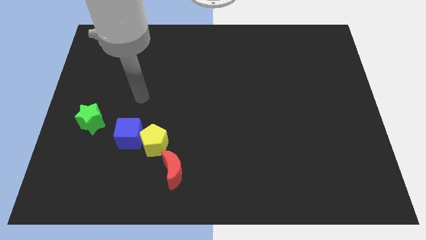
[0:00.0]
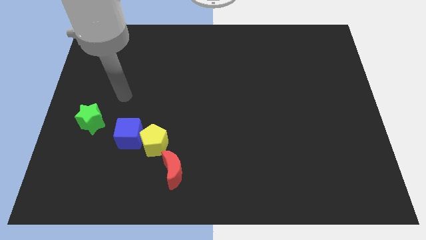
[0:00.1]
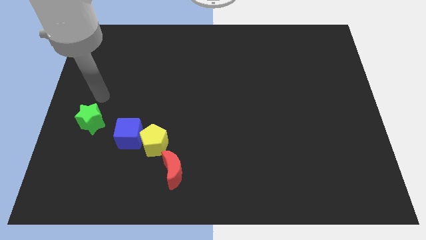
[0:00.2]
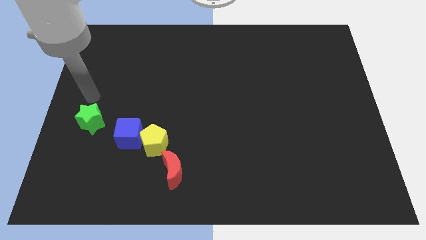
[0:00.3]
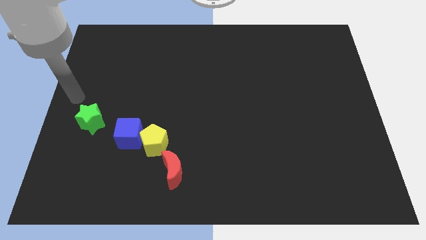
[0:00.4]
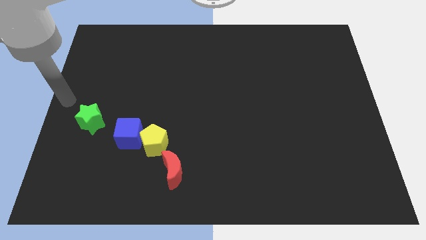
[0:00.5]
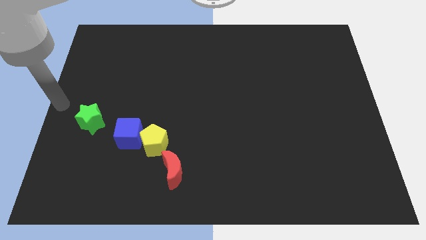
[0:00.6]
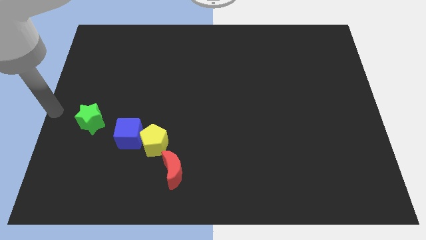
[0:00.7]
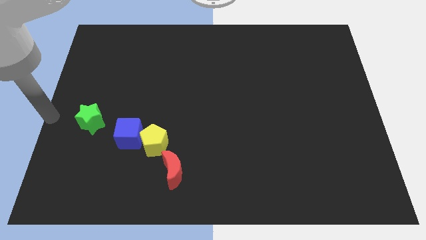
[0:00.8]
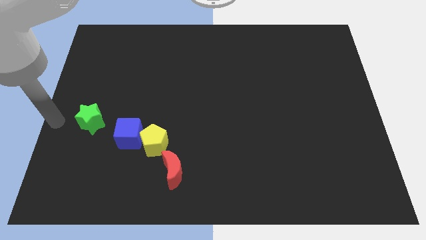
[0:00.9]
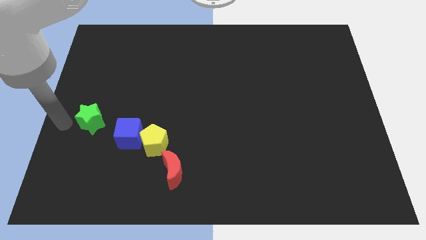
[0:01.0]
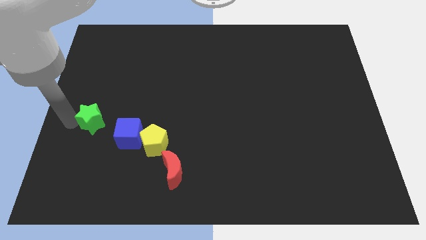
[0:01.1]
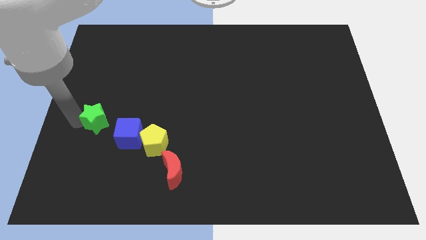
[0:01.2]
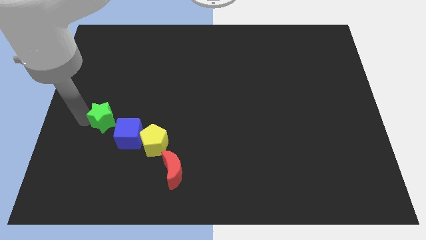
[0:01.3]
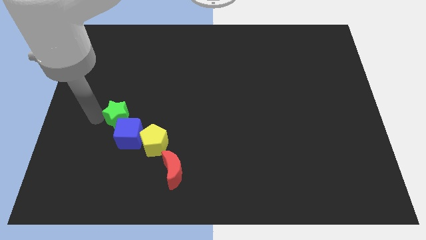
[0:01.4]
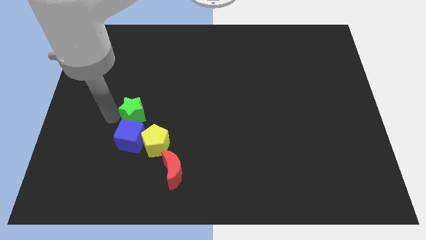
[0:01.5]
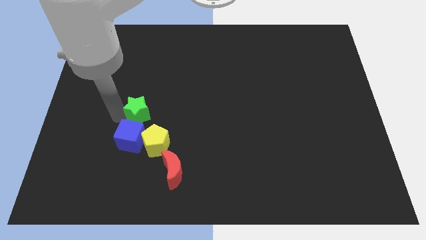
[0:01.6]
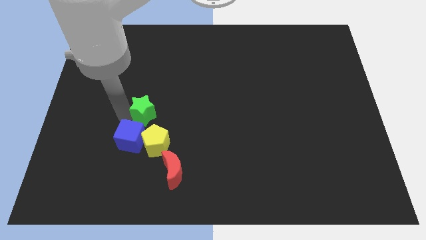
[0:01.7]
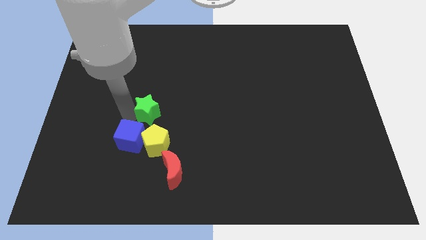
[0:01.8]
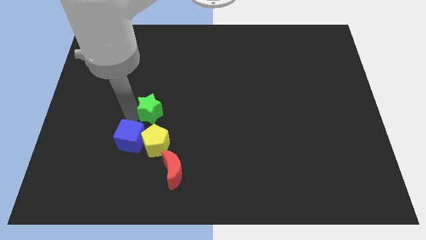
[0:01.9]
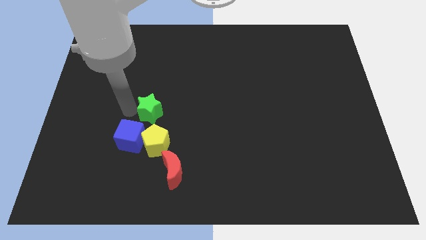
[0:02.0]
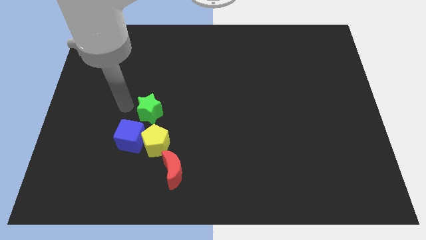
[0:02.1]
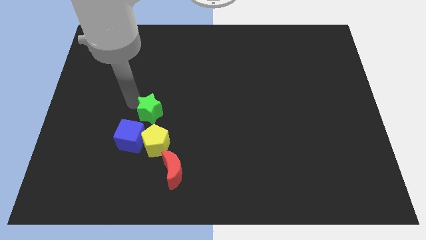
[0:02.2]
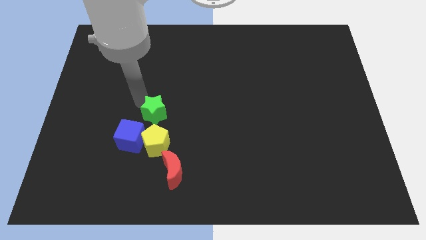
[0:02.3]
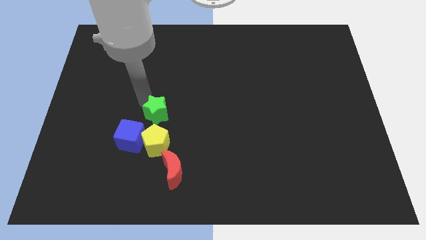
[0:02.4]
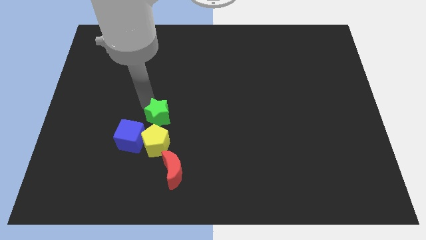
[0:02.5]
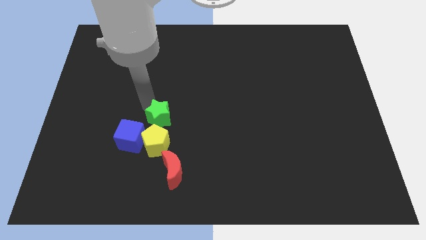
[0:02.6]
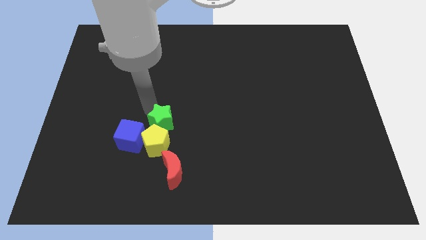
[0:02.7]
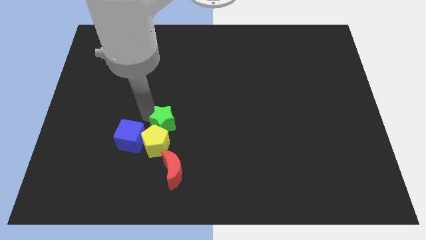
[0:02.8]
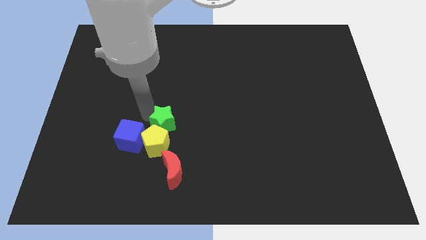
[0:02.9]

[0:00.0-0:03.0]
move the star close to the yellow block

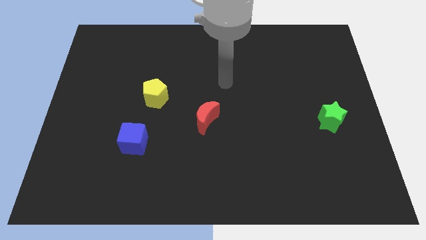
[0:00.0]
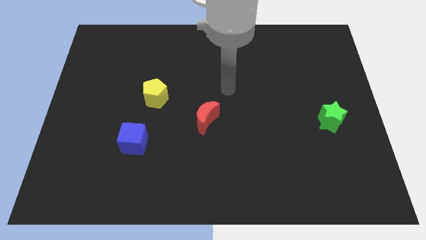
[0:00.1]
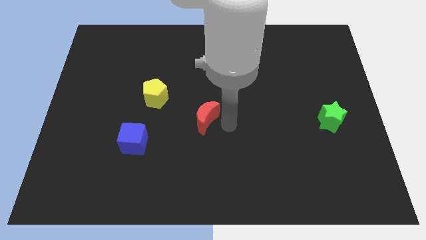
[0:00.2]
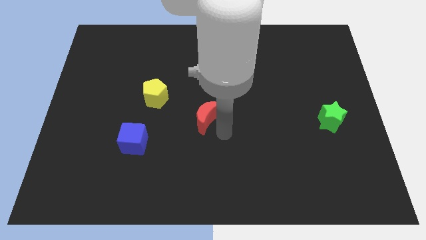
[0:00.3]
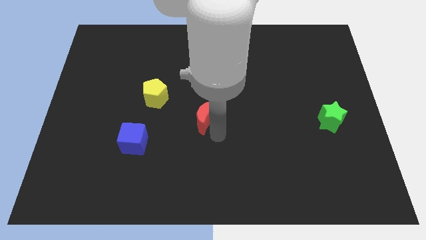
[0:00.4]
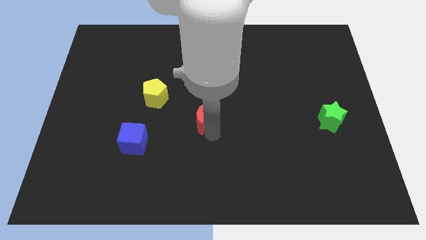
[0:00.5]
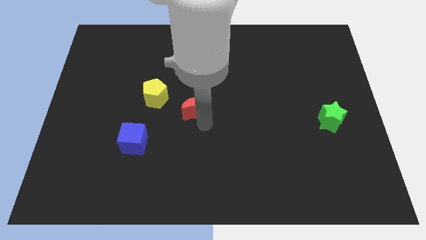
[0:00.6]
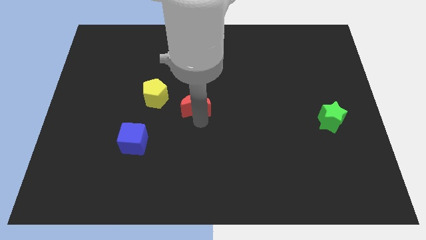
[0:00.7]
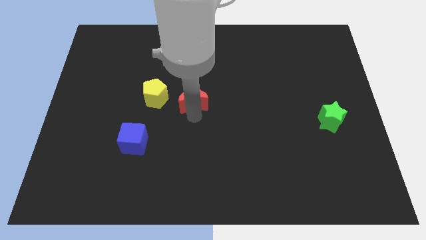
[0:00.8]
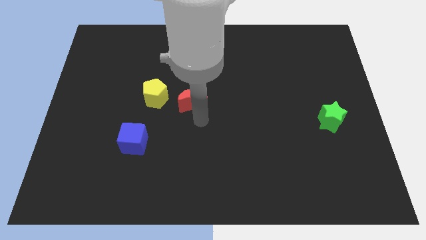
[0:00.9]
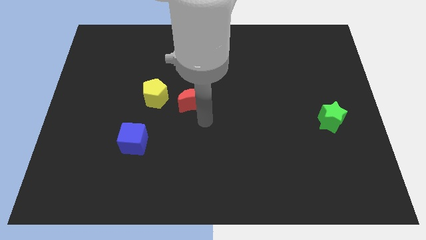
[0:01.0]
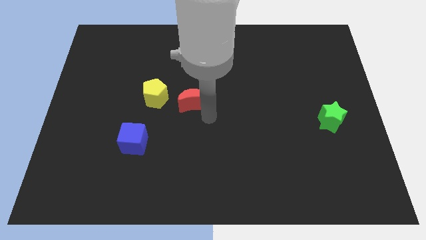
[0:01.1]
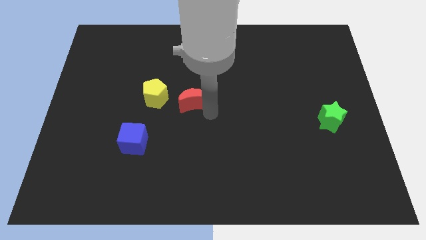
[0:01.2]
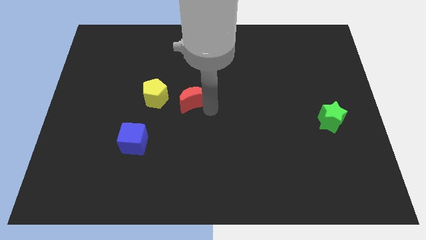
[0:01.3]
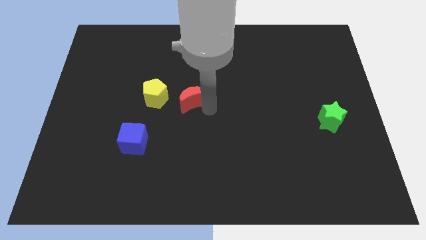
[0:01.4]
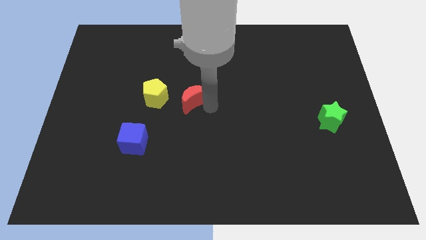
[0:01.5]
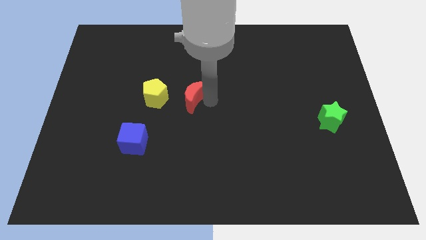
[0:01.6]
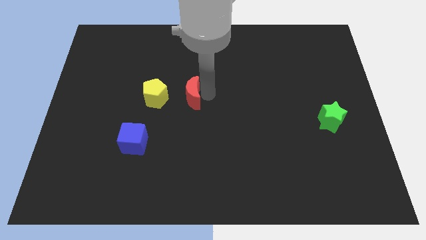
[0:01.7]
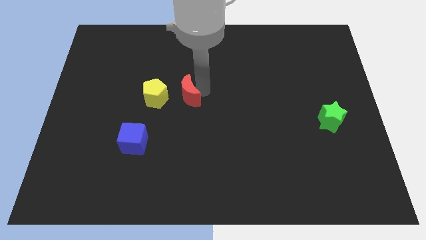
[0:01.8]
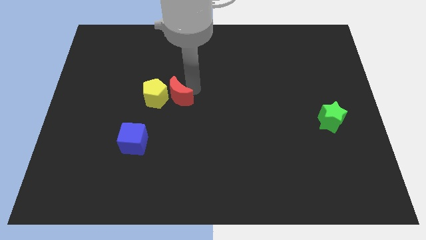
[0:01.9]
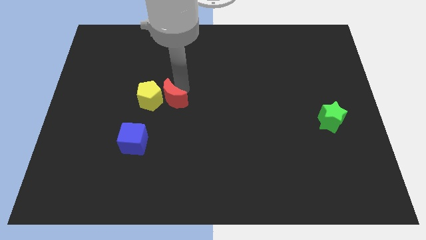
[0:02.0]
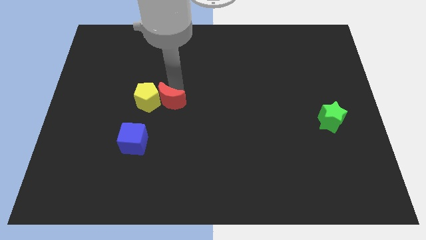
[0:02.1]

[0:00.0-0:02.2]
move the moon next to the yellow block

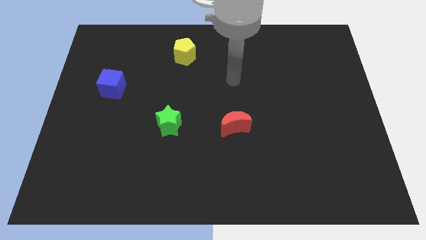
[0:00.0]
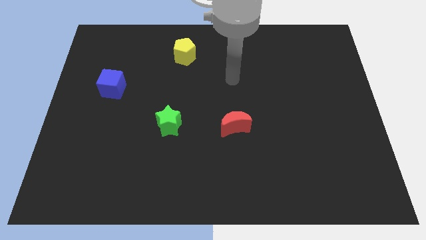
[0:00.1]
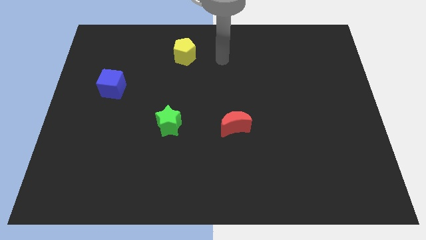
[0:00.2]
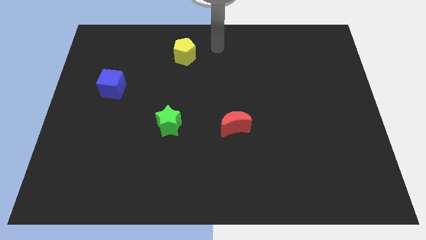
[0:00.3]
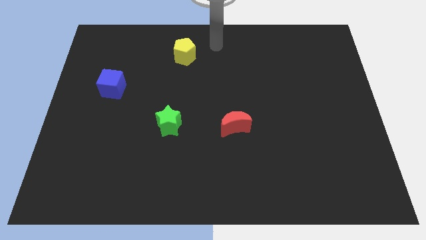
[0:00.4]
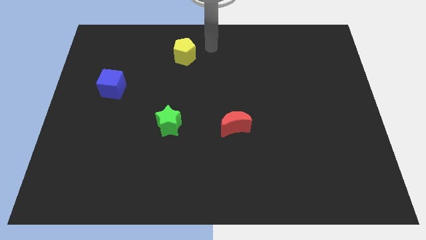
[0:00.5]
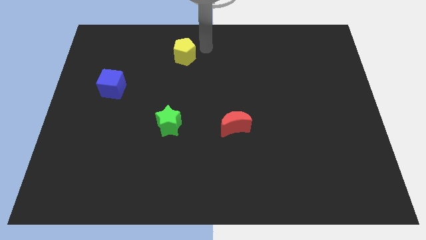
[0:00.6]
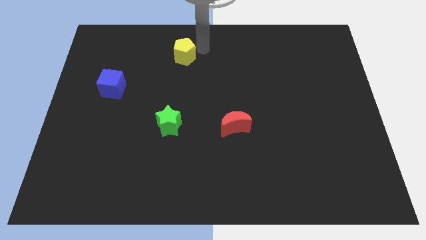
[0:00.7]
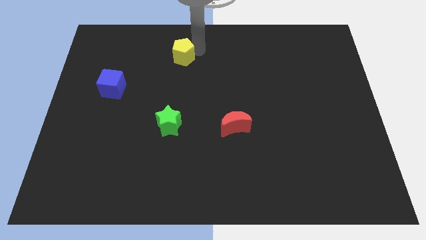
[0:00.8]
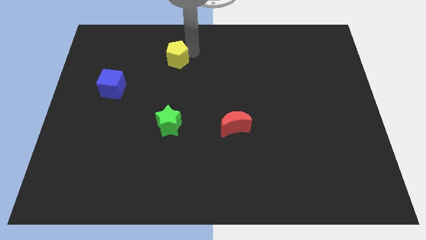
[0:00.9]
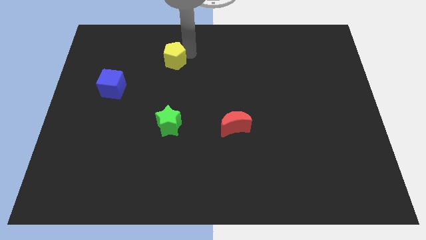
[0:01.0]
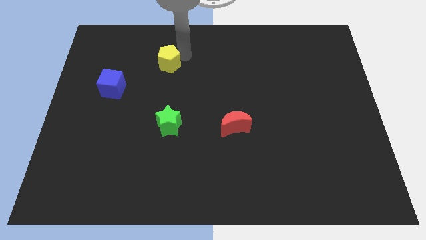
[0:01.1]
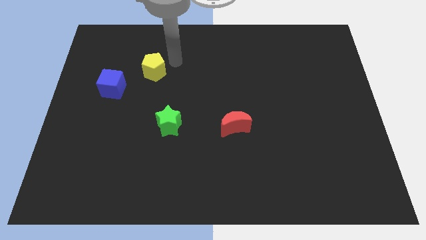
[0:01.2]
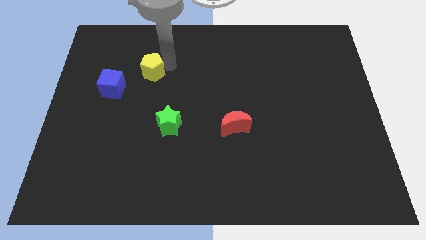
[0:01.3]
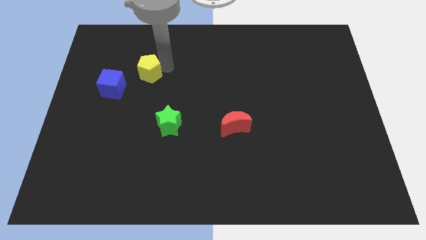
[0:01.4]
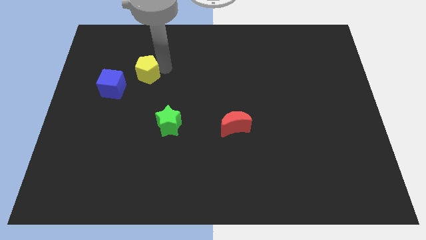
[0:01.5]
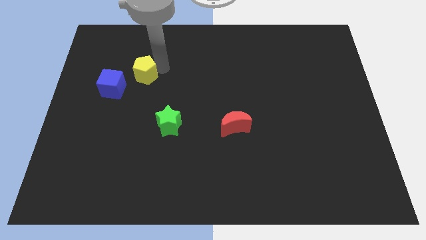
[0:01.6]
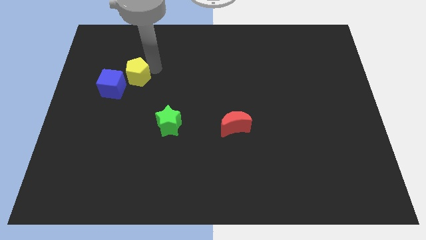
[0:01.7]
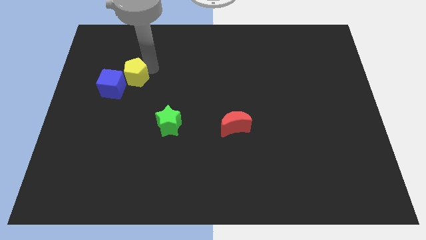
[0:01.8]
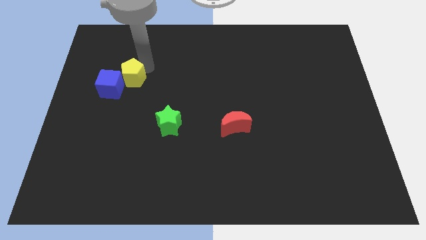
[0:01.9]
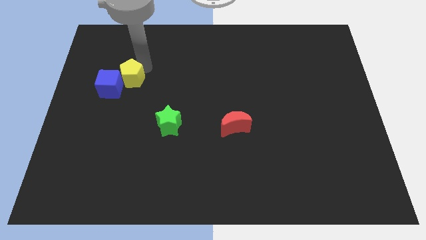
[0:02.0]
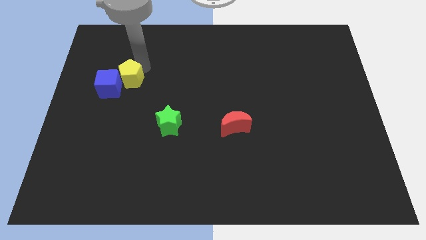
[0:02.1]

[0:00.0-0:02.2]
push the yellow block close to the blue block

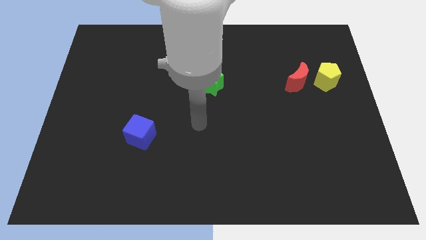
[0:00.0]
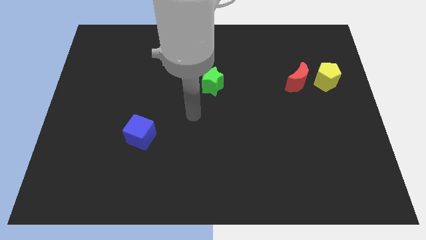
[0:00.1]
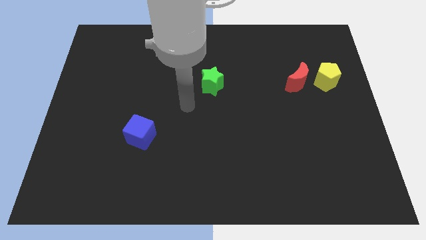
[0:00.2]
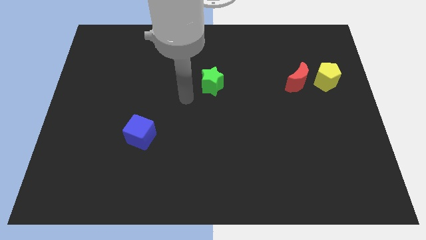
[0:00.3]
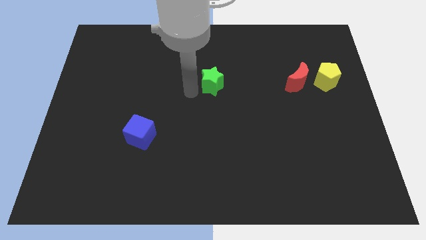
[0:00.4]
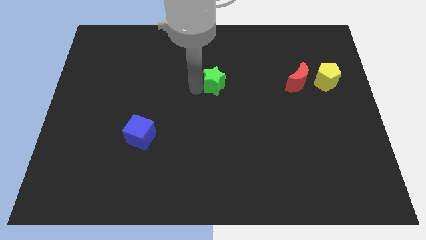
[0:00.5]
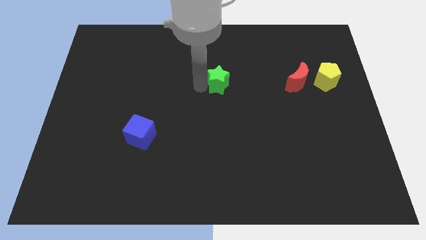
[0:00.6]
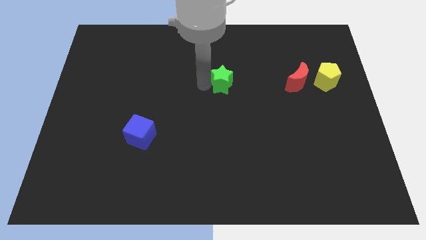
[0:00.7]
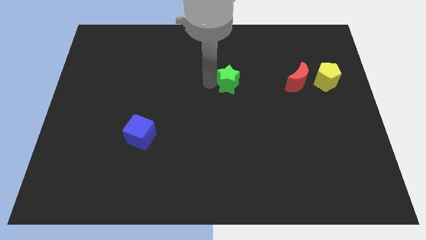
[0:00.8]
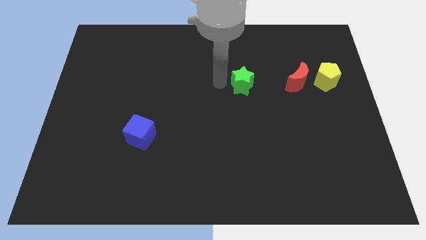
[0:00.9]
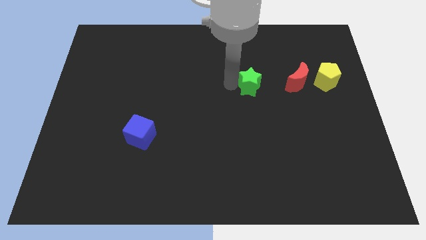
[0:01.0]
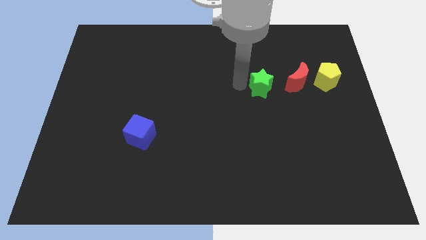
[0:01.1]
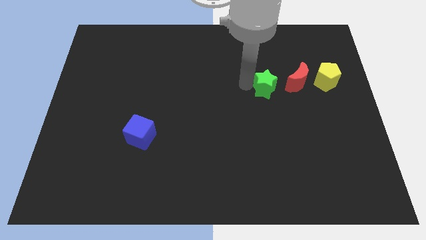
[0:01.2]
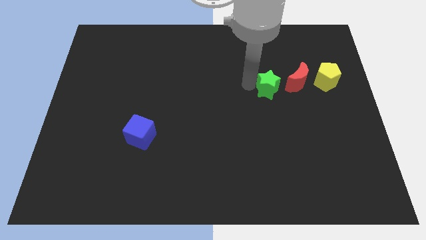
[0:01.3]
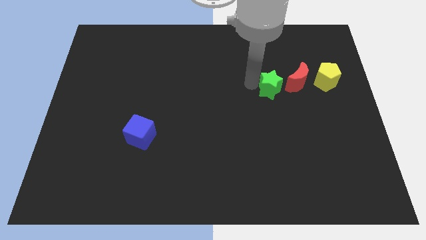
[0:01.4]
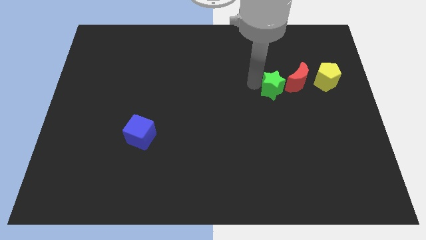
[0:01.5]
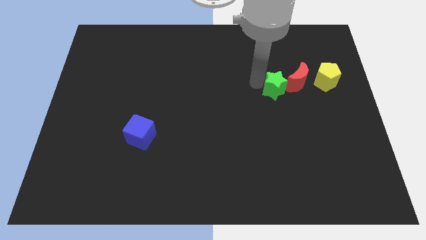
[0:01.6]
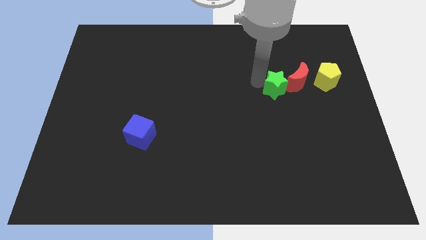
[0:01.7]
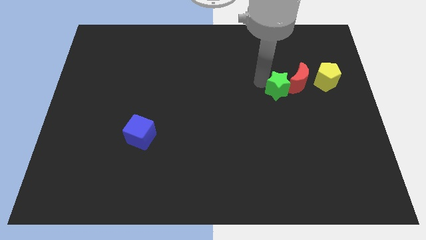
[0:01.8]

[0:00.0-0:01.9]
put the star towards the red block
